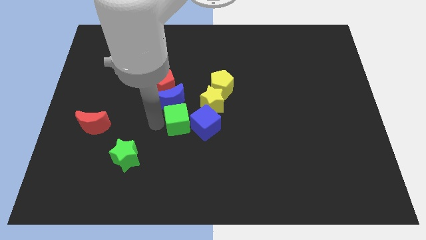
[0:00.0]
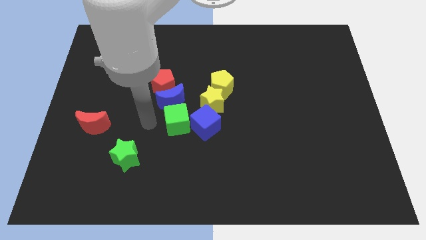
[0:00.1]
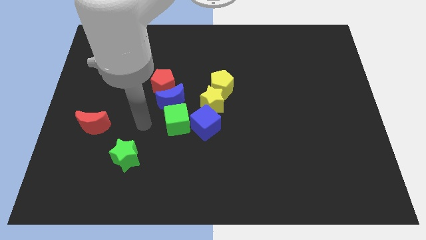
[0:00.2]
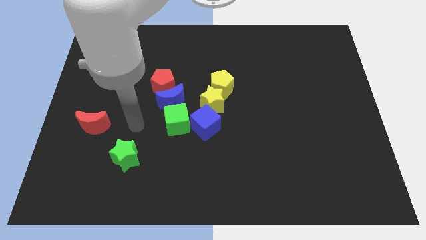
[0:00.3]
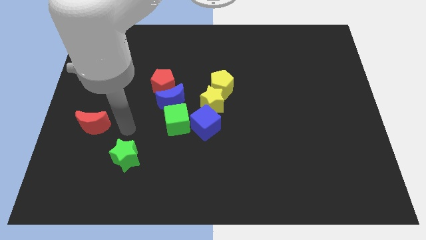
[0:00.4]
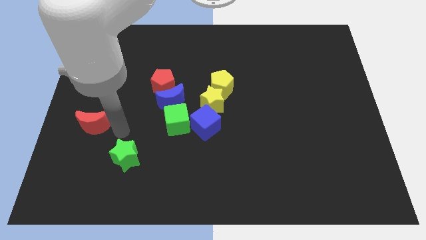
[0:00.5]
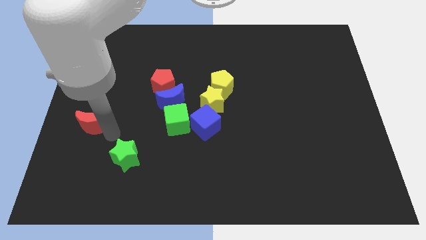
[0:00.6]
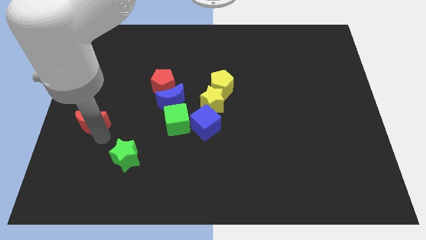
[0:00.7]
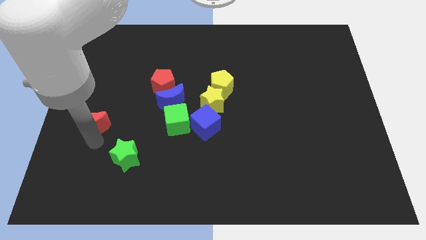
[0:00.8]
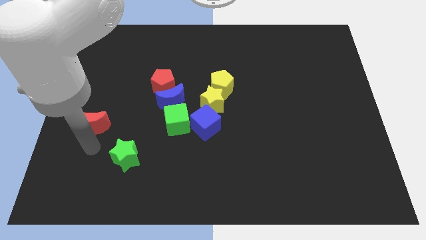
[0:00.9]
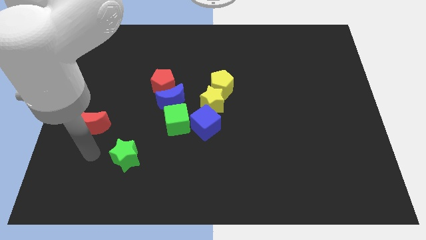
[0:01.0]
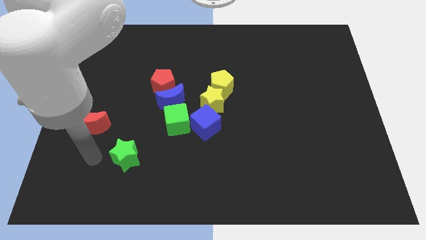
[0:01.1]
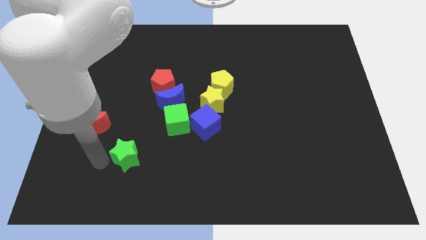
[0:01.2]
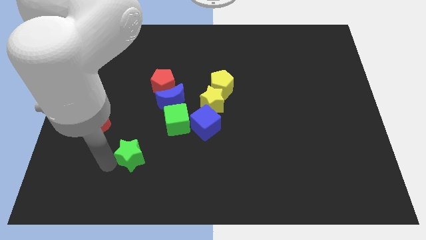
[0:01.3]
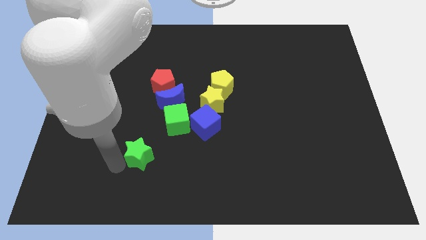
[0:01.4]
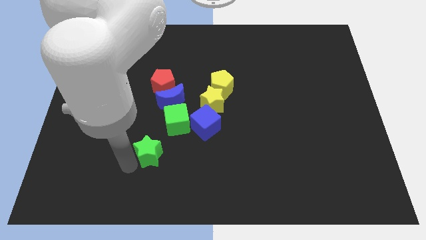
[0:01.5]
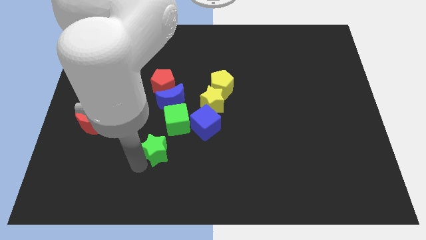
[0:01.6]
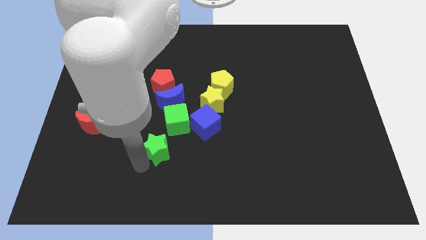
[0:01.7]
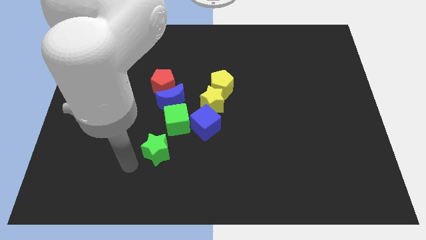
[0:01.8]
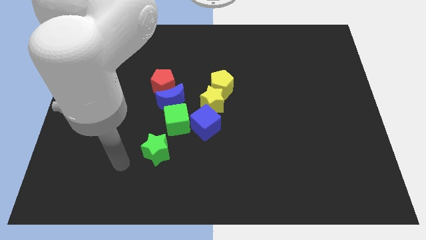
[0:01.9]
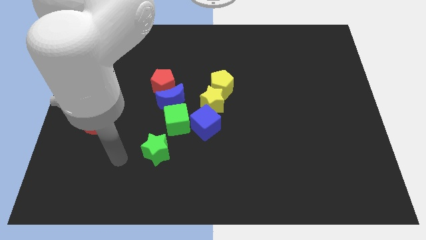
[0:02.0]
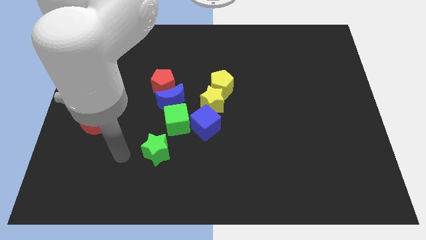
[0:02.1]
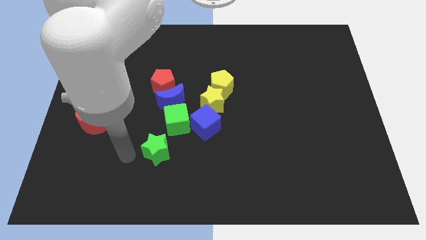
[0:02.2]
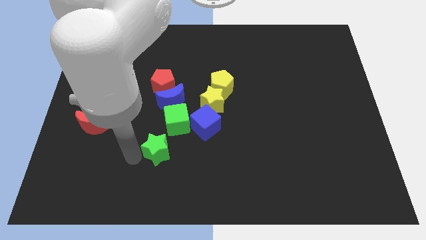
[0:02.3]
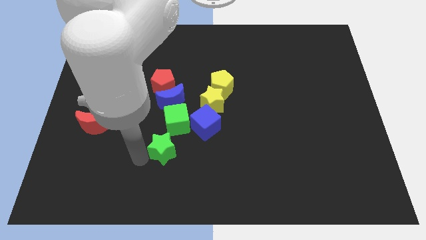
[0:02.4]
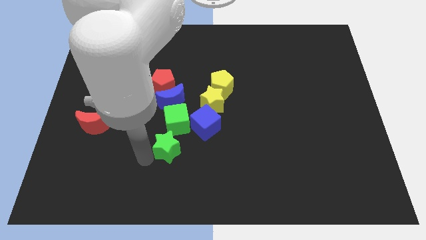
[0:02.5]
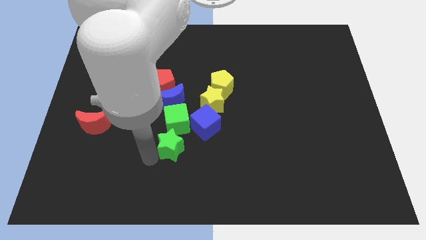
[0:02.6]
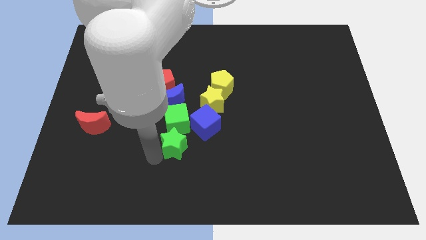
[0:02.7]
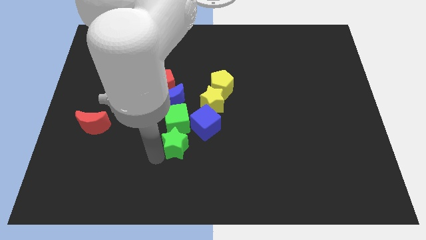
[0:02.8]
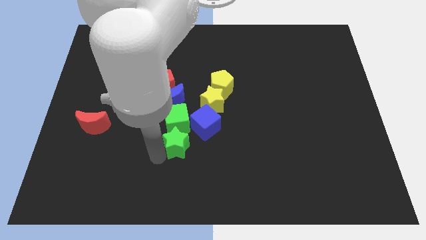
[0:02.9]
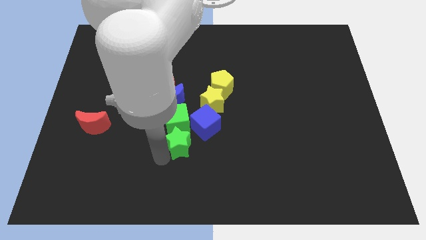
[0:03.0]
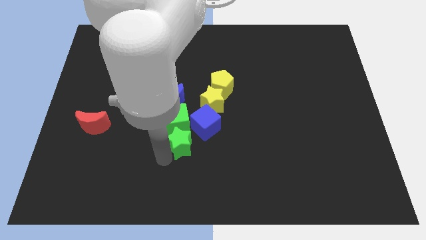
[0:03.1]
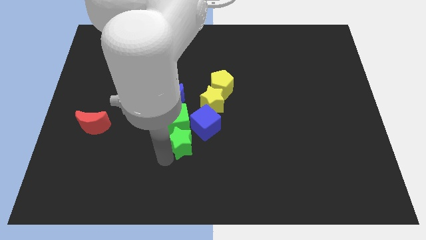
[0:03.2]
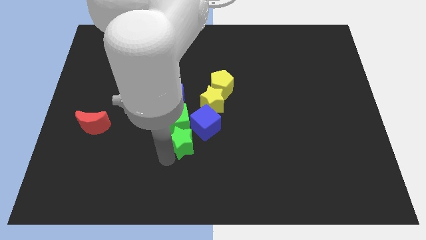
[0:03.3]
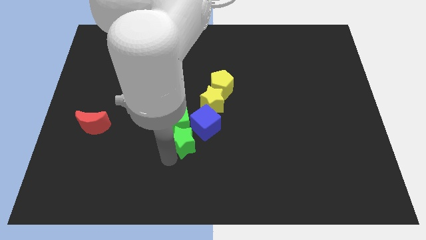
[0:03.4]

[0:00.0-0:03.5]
place the green star below the green cube

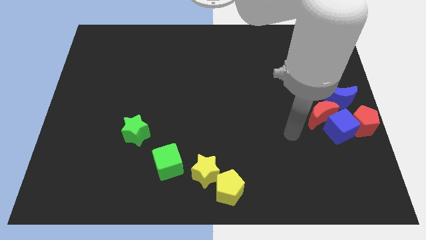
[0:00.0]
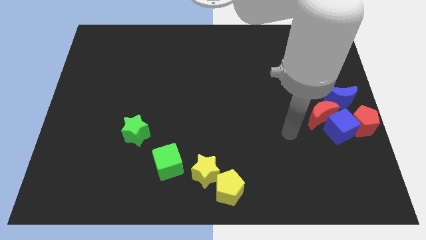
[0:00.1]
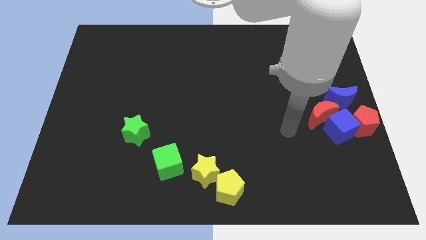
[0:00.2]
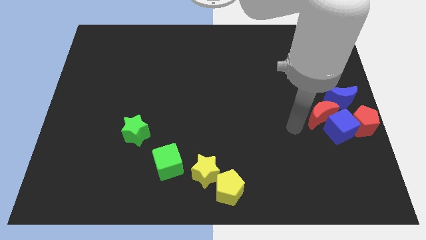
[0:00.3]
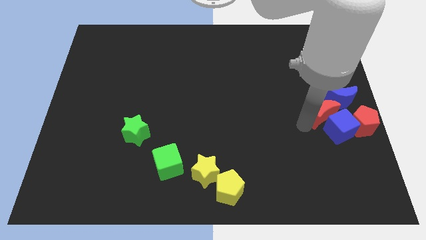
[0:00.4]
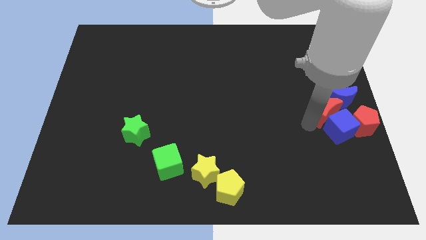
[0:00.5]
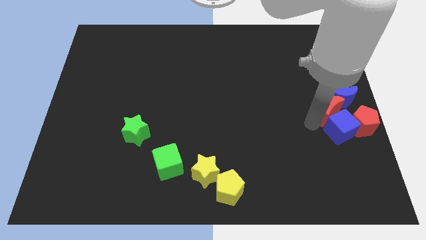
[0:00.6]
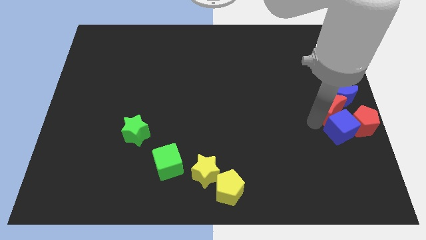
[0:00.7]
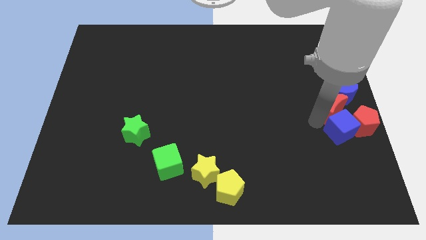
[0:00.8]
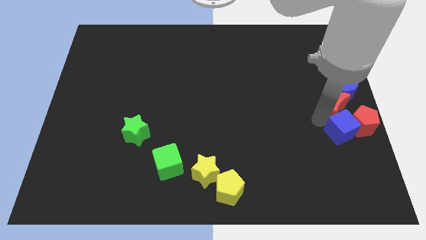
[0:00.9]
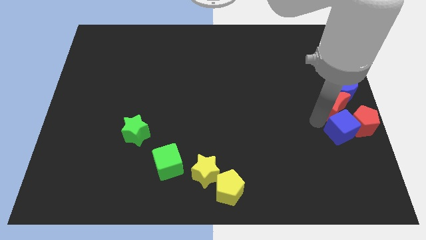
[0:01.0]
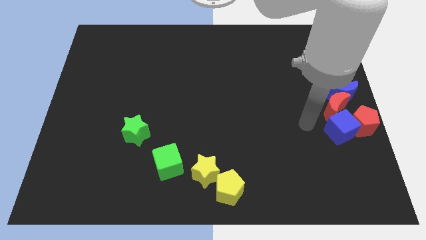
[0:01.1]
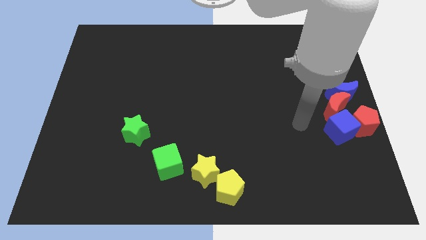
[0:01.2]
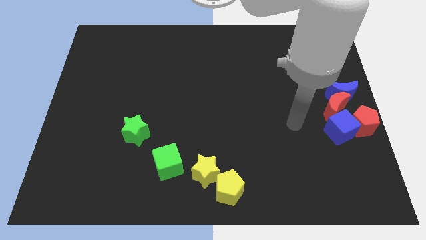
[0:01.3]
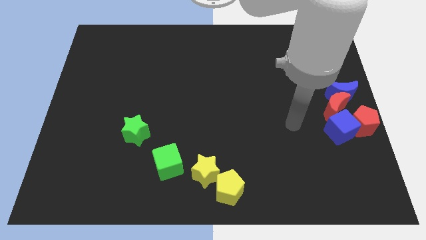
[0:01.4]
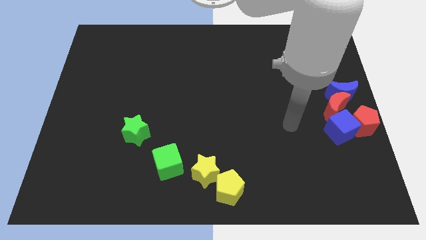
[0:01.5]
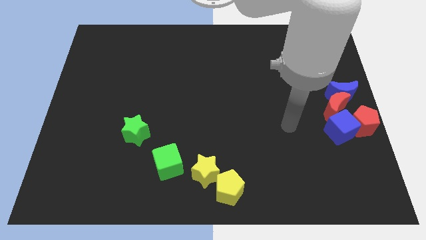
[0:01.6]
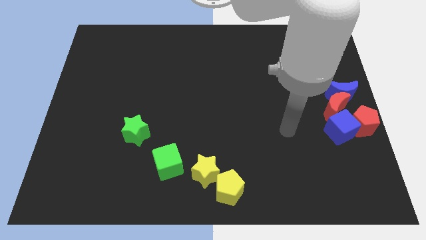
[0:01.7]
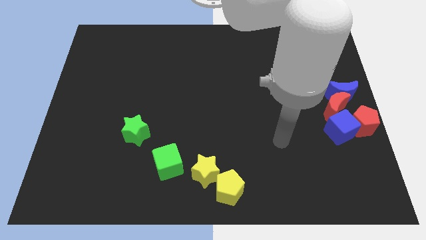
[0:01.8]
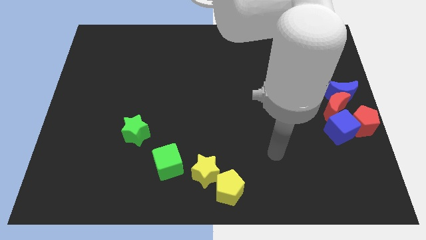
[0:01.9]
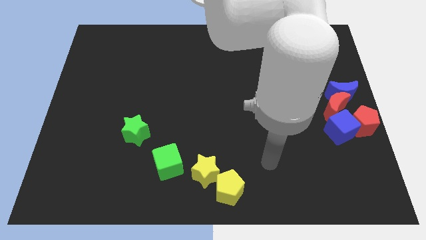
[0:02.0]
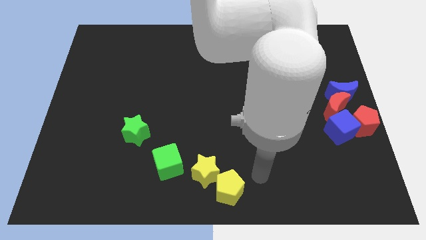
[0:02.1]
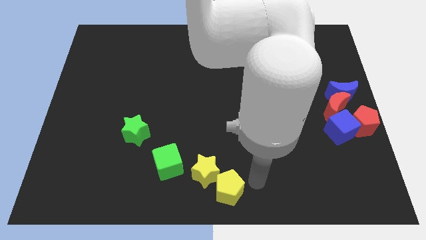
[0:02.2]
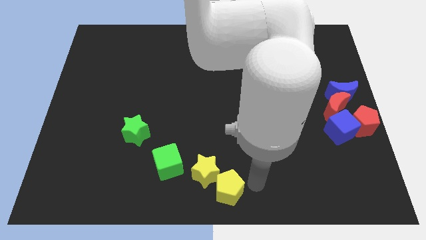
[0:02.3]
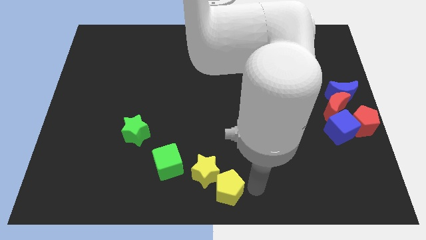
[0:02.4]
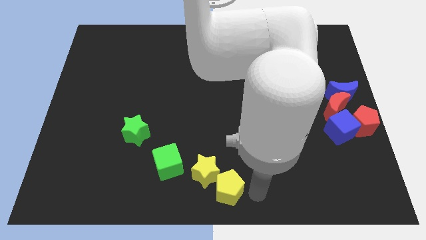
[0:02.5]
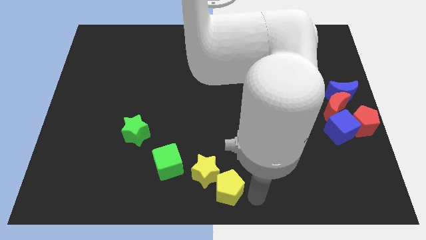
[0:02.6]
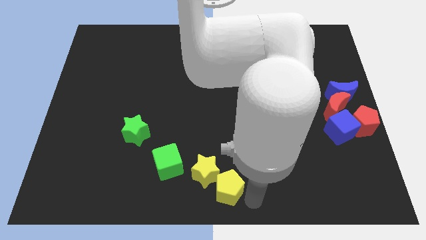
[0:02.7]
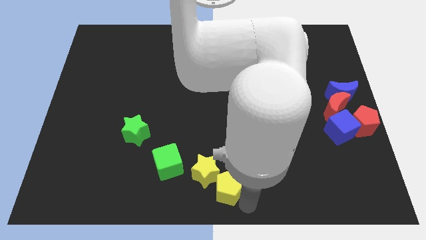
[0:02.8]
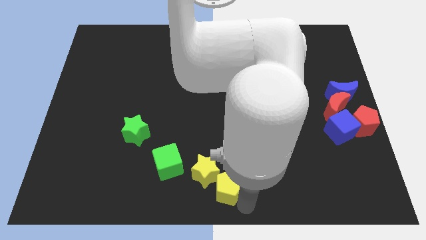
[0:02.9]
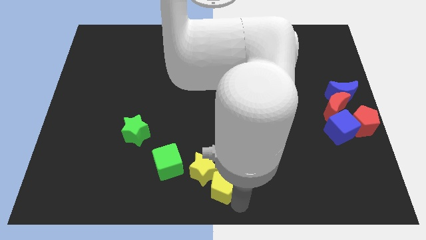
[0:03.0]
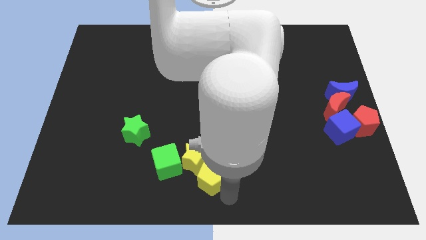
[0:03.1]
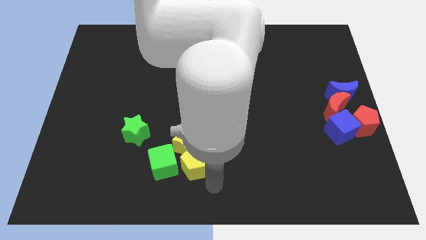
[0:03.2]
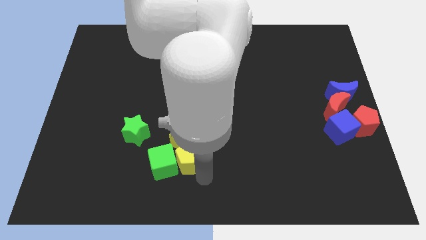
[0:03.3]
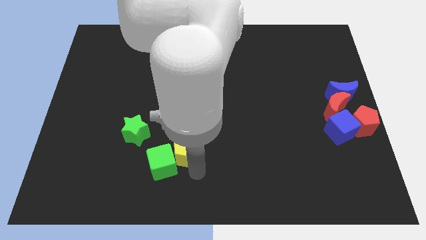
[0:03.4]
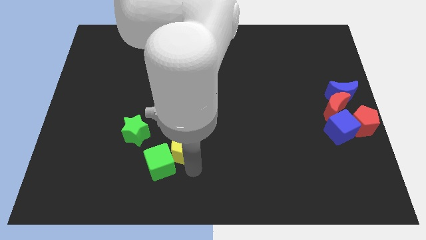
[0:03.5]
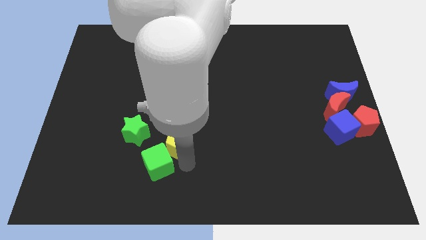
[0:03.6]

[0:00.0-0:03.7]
push the red crescent into the blue crescent

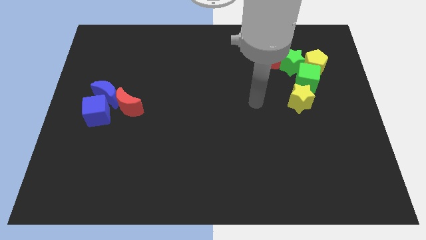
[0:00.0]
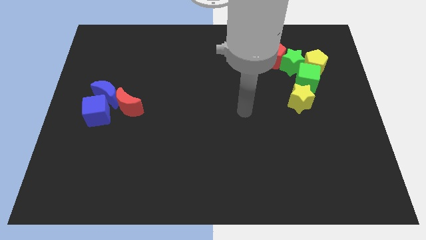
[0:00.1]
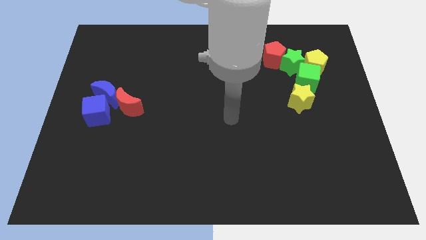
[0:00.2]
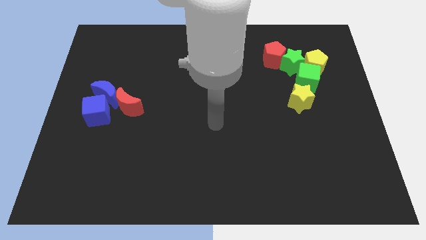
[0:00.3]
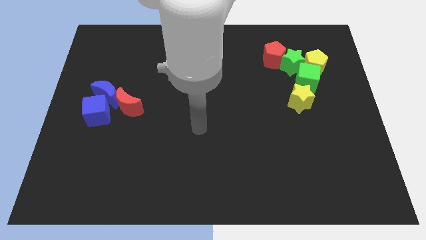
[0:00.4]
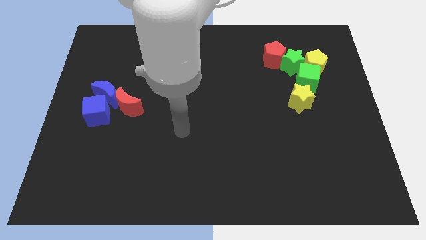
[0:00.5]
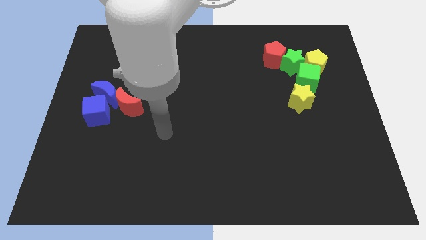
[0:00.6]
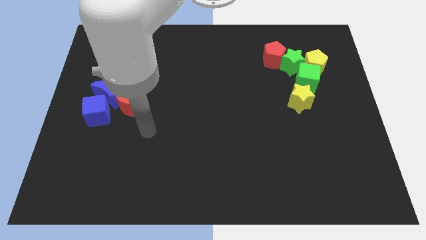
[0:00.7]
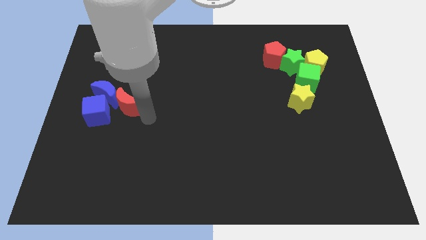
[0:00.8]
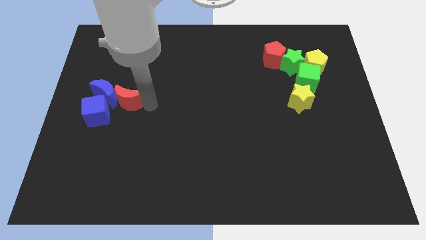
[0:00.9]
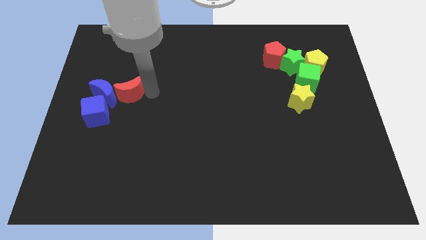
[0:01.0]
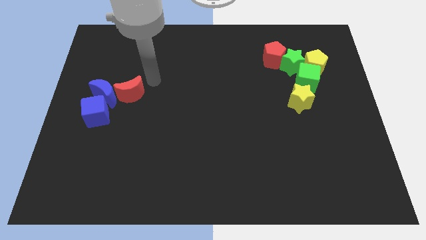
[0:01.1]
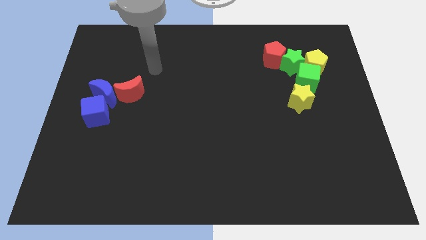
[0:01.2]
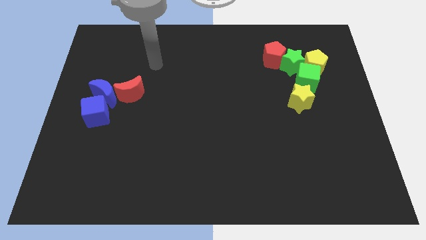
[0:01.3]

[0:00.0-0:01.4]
slide the red moon up slightly

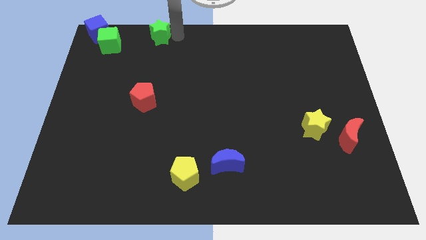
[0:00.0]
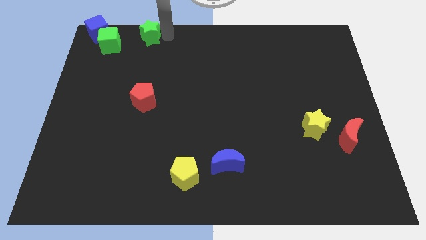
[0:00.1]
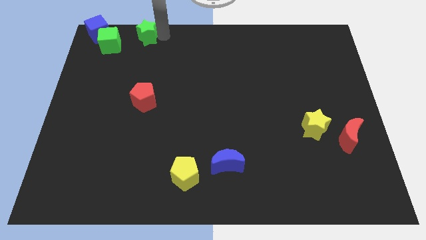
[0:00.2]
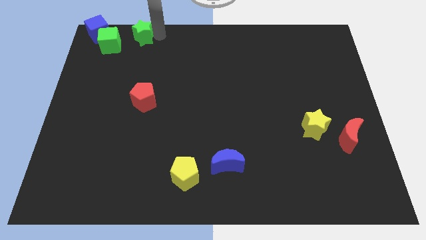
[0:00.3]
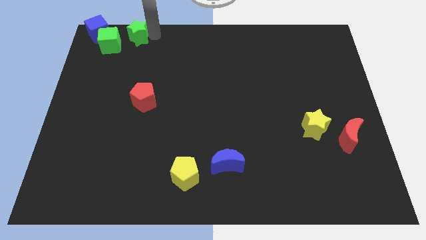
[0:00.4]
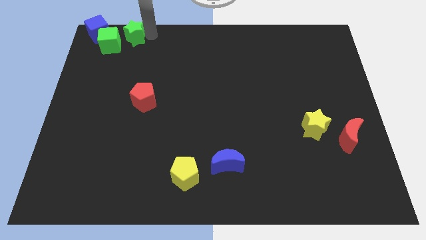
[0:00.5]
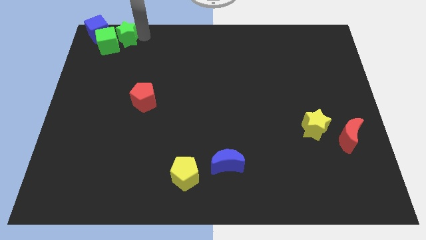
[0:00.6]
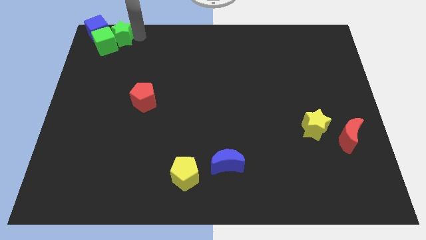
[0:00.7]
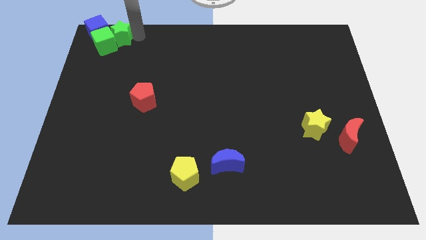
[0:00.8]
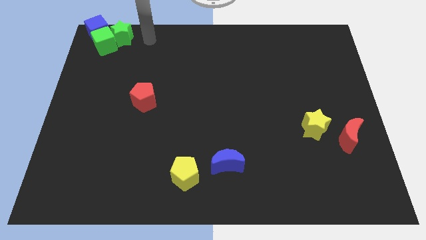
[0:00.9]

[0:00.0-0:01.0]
push the green star into the green cube
